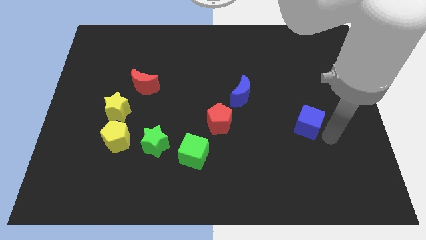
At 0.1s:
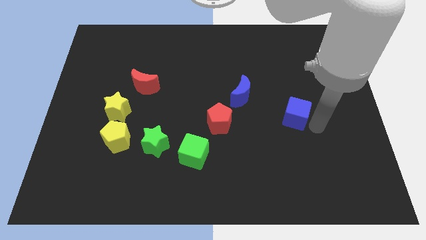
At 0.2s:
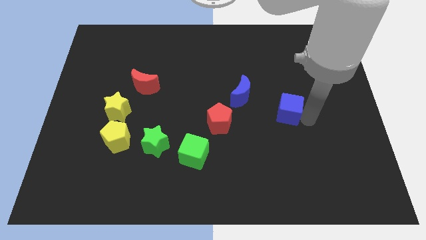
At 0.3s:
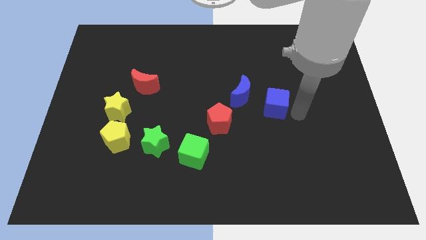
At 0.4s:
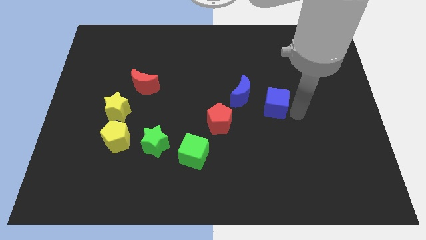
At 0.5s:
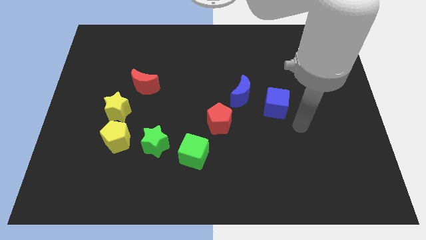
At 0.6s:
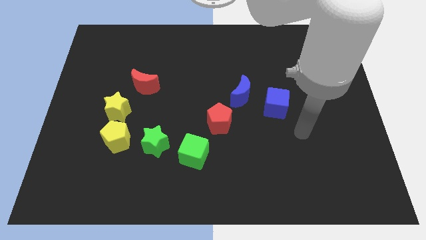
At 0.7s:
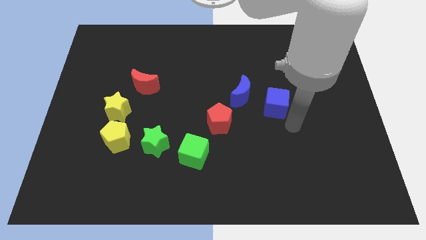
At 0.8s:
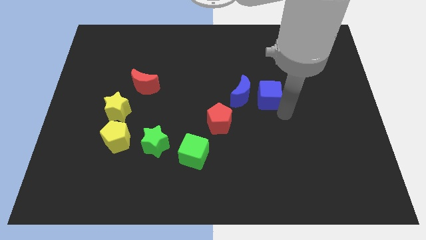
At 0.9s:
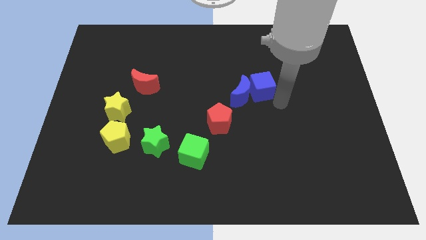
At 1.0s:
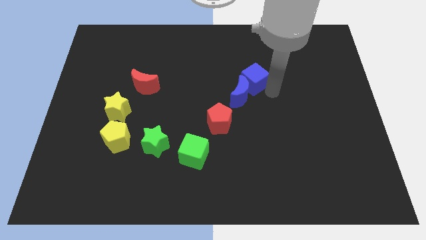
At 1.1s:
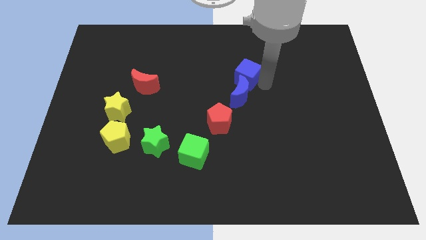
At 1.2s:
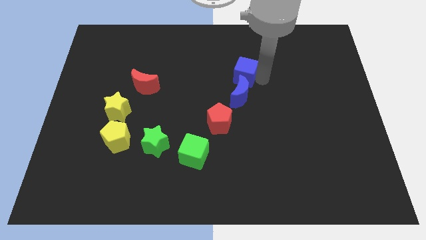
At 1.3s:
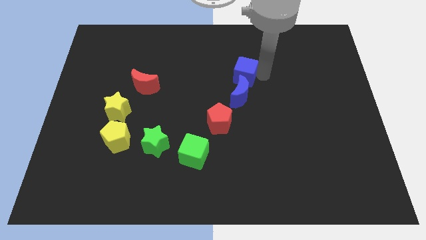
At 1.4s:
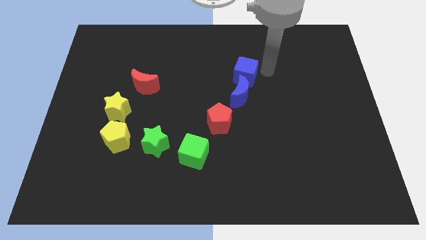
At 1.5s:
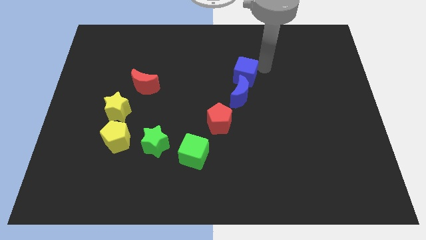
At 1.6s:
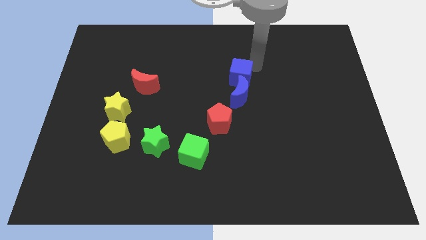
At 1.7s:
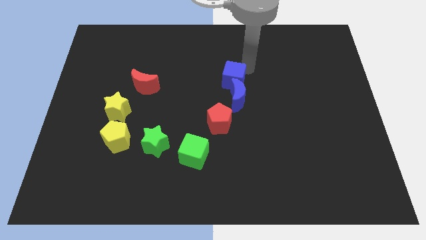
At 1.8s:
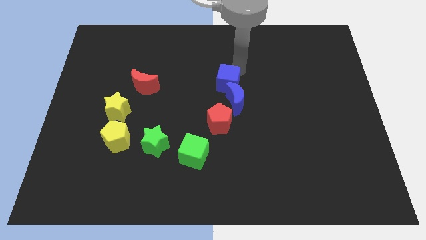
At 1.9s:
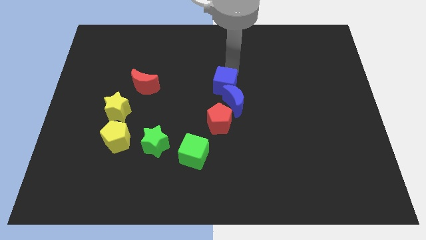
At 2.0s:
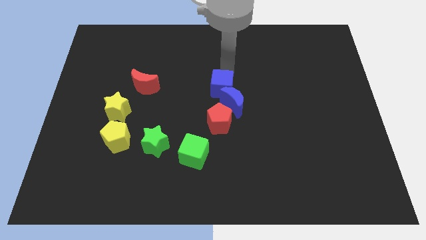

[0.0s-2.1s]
push the blue crescent using the blue cube

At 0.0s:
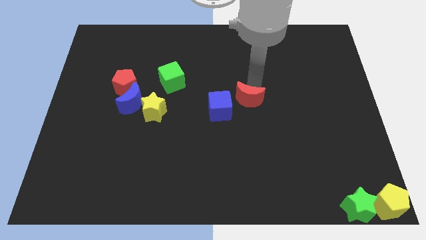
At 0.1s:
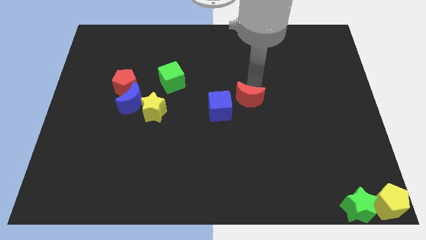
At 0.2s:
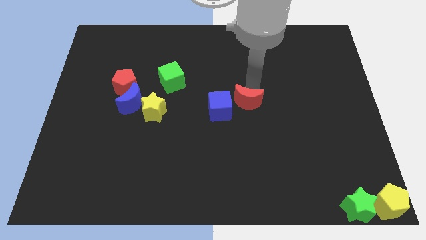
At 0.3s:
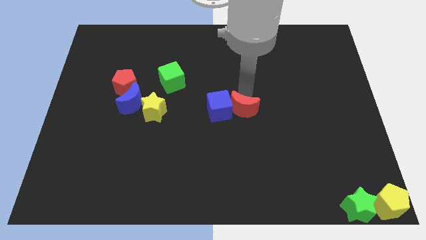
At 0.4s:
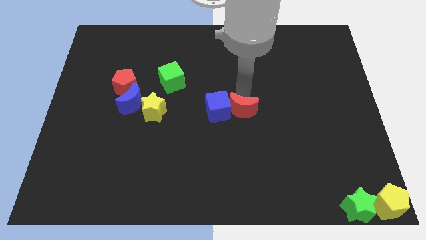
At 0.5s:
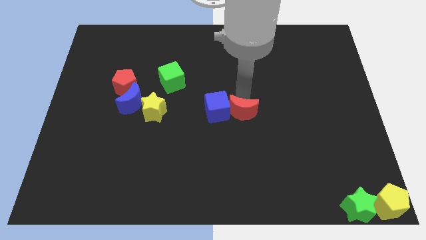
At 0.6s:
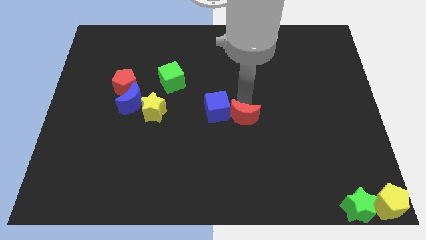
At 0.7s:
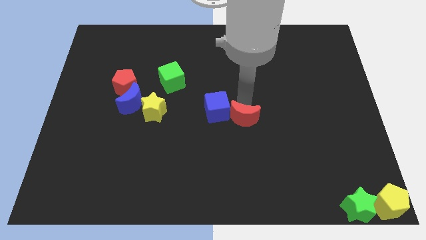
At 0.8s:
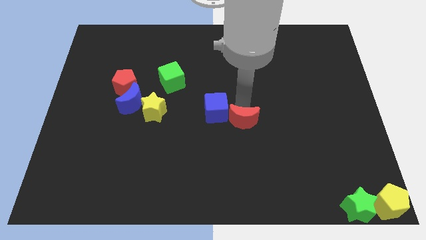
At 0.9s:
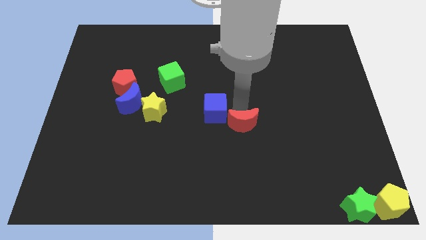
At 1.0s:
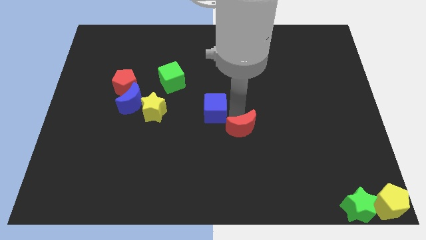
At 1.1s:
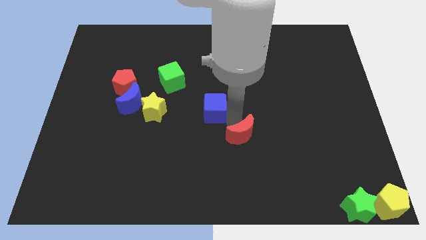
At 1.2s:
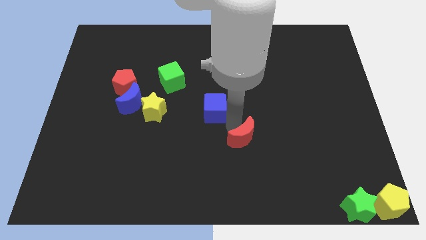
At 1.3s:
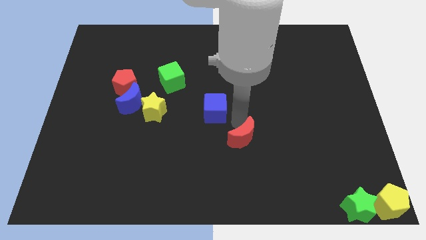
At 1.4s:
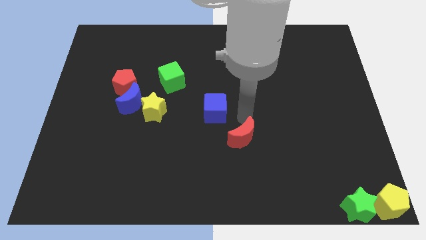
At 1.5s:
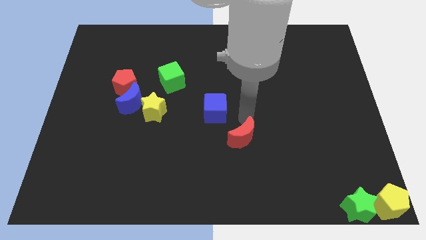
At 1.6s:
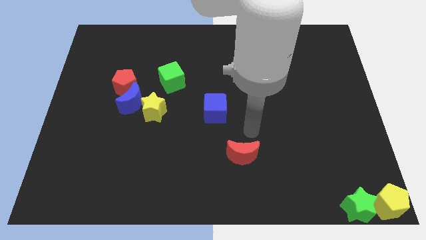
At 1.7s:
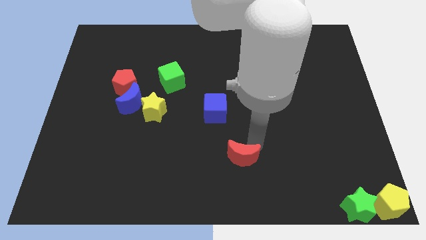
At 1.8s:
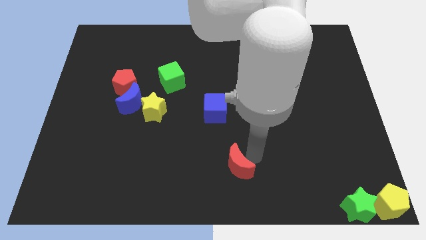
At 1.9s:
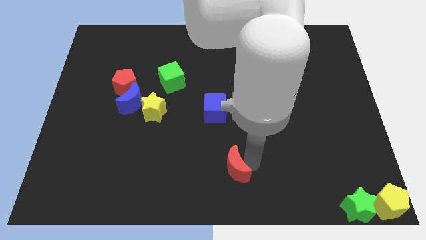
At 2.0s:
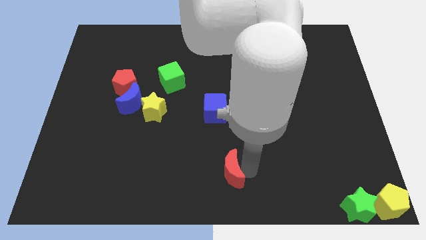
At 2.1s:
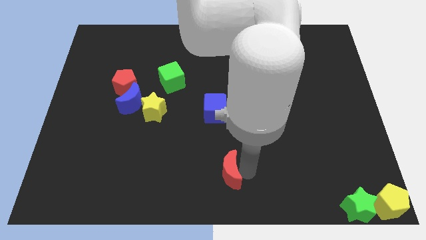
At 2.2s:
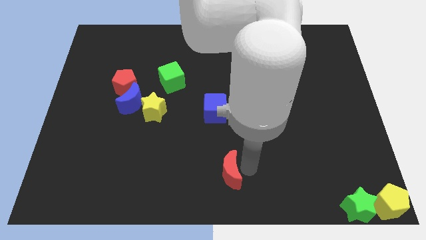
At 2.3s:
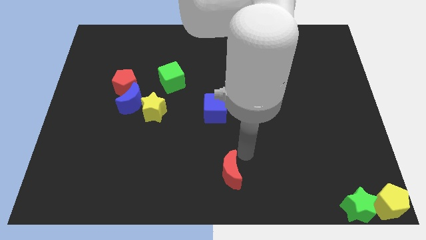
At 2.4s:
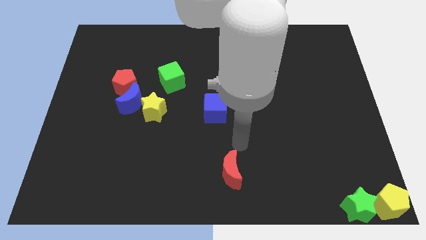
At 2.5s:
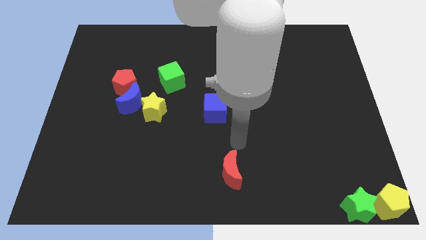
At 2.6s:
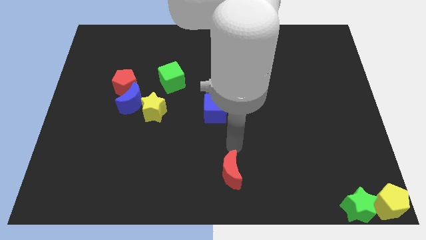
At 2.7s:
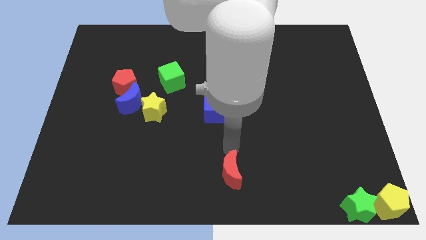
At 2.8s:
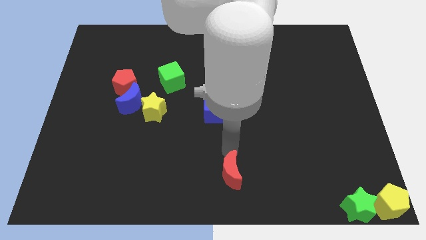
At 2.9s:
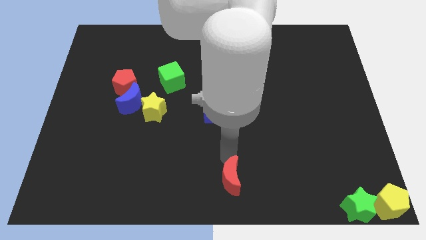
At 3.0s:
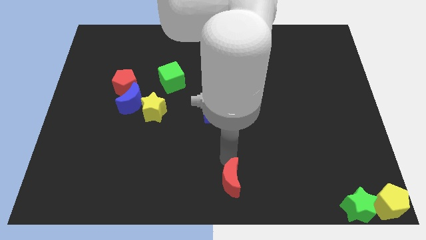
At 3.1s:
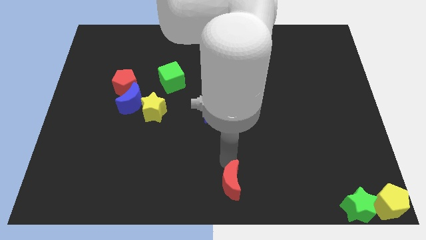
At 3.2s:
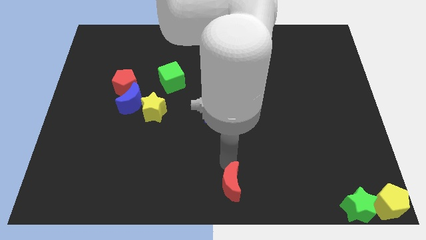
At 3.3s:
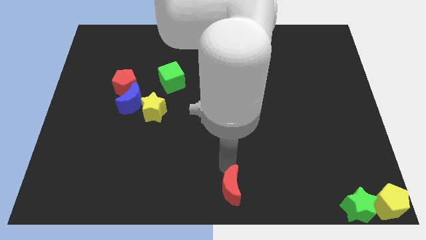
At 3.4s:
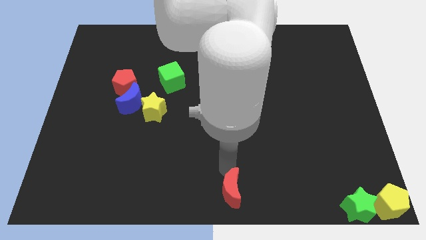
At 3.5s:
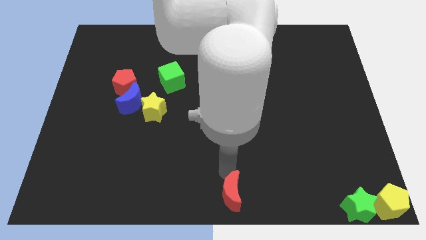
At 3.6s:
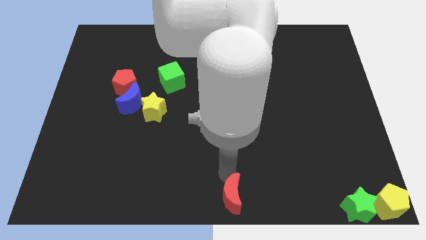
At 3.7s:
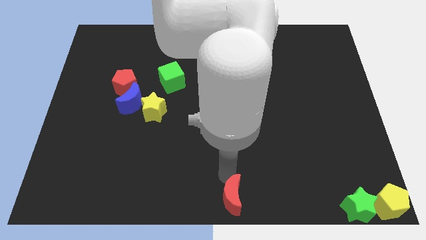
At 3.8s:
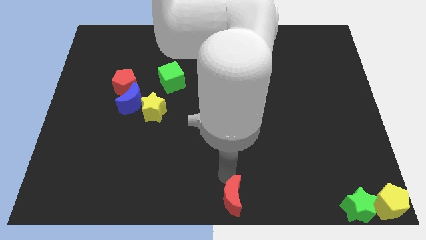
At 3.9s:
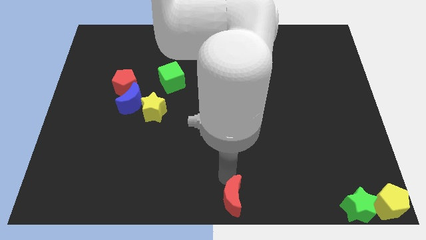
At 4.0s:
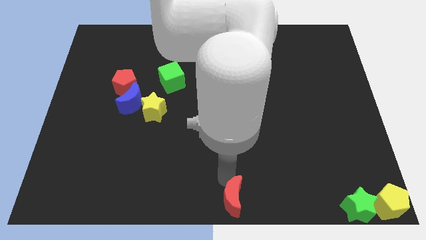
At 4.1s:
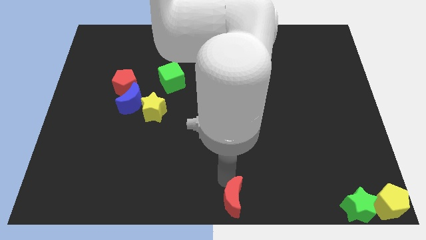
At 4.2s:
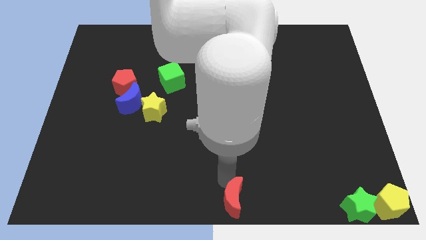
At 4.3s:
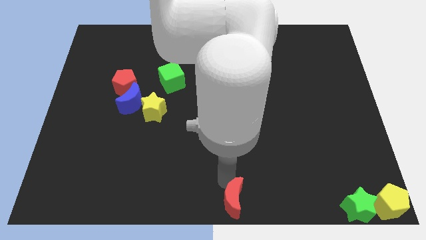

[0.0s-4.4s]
move the red crescent to the bottom center of the board

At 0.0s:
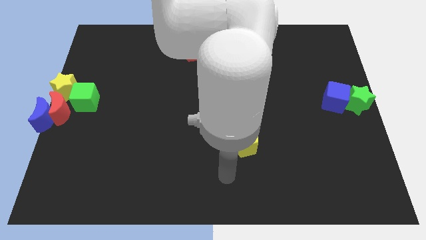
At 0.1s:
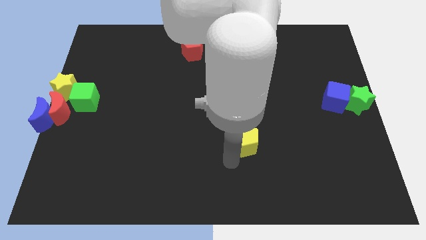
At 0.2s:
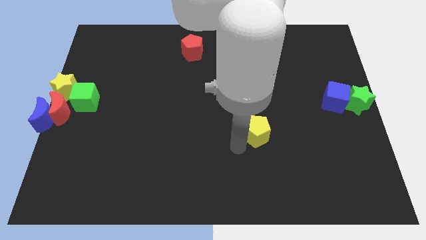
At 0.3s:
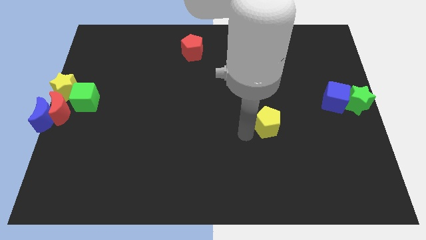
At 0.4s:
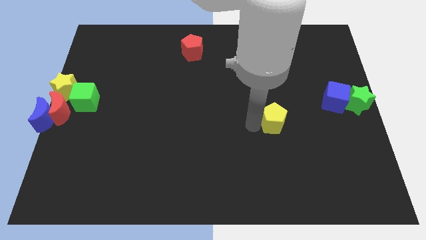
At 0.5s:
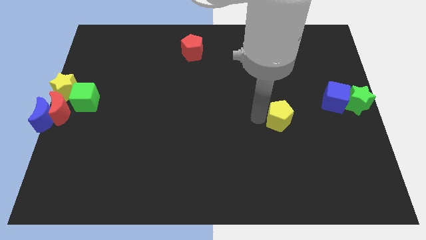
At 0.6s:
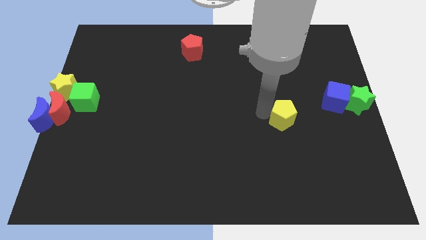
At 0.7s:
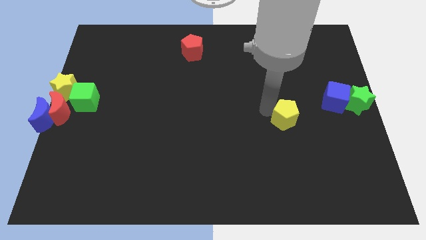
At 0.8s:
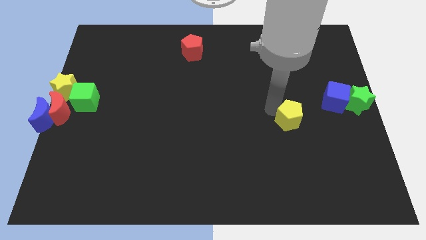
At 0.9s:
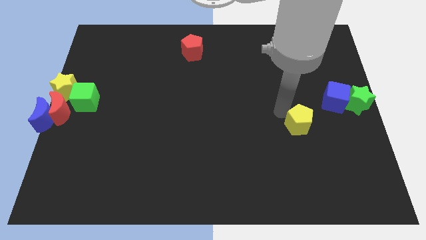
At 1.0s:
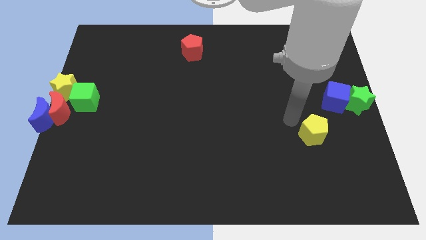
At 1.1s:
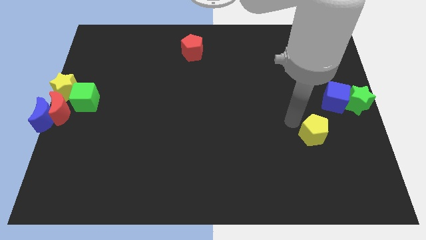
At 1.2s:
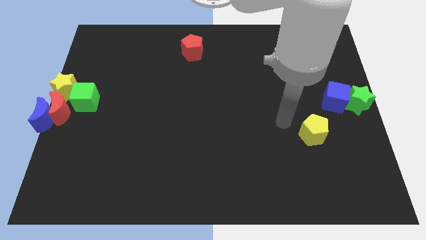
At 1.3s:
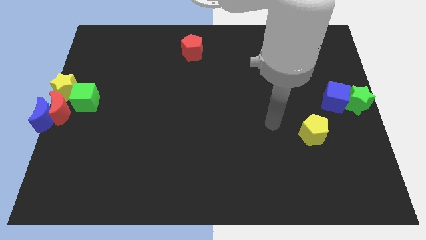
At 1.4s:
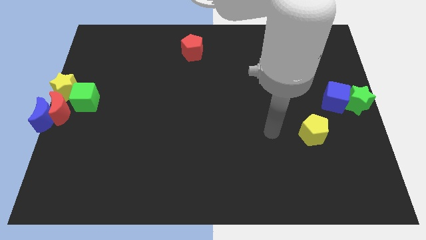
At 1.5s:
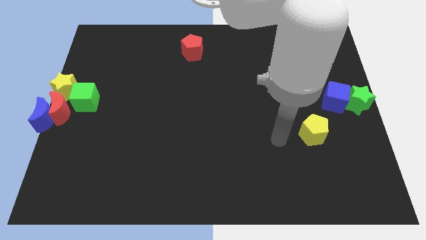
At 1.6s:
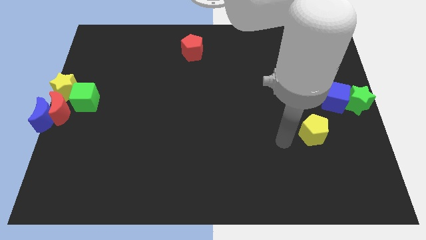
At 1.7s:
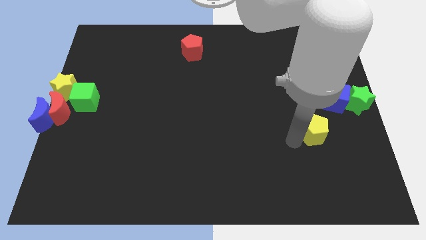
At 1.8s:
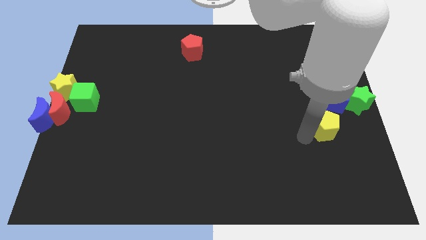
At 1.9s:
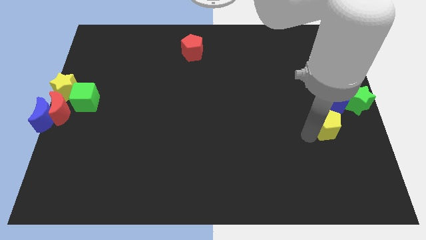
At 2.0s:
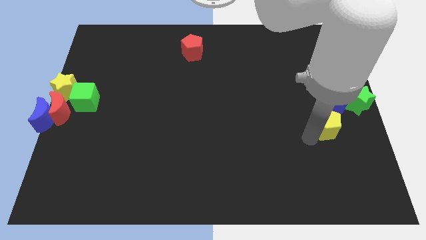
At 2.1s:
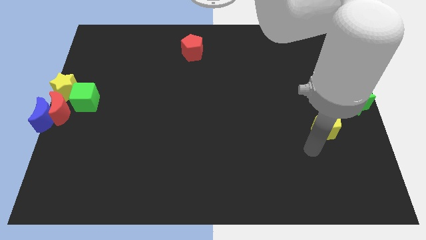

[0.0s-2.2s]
slide the yellow pentagon towards the blue cube

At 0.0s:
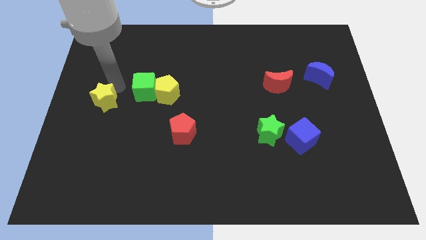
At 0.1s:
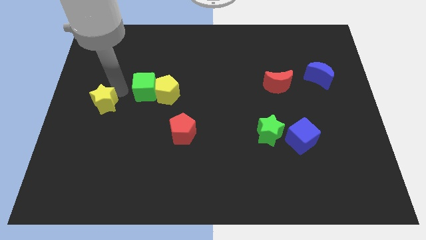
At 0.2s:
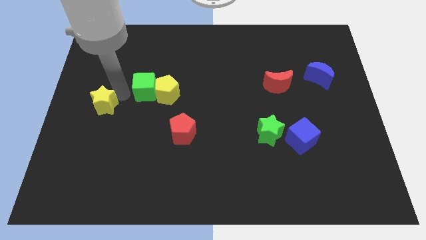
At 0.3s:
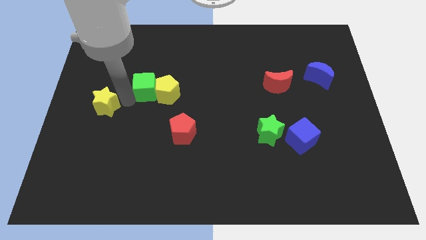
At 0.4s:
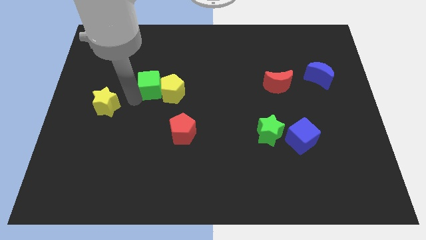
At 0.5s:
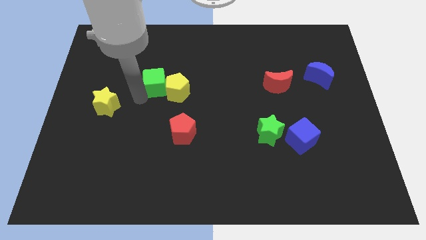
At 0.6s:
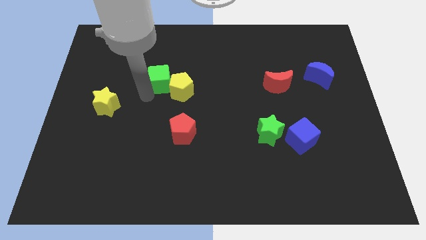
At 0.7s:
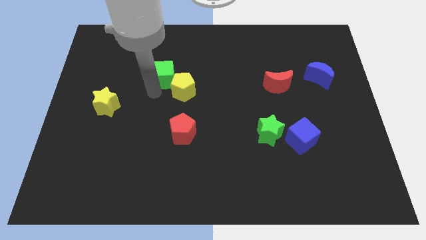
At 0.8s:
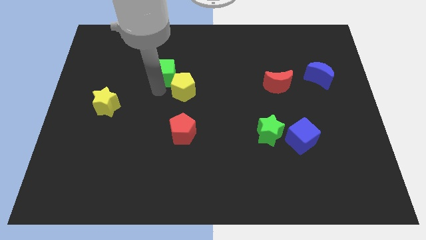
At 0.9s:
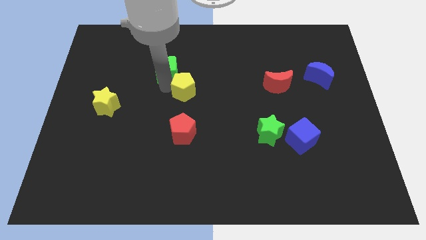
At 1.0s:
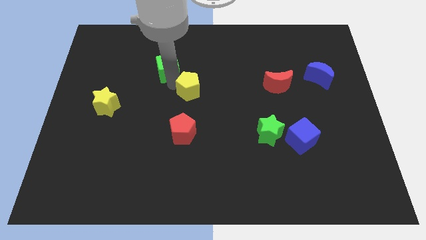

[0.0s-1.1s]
move the yellow pentagon to the top side of the red pentagon
